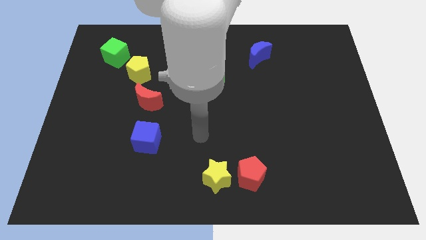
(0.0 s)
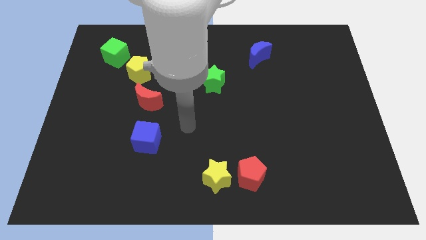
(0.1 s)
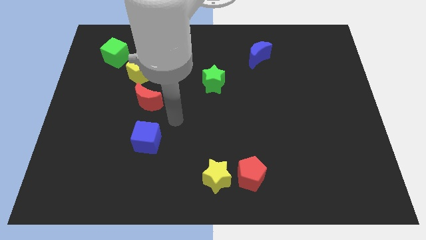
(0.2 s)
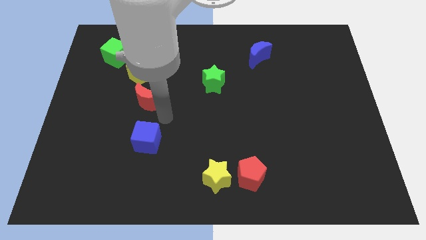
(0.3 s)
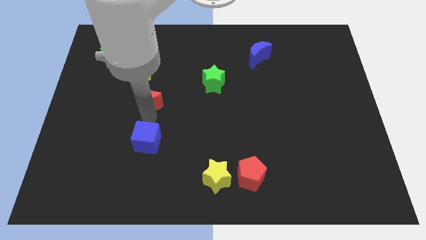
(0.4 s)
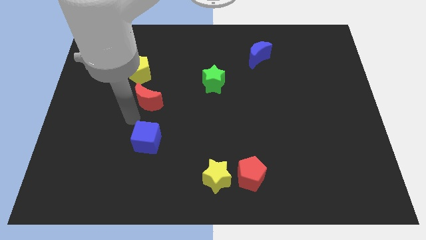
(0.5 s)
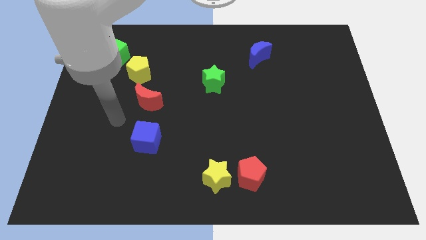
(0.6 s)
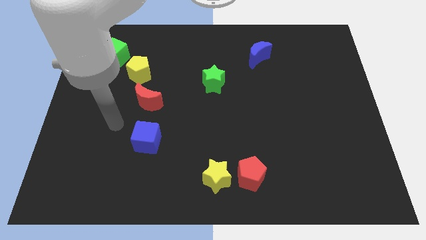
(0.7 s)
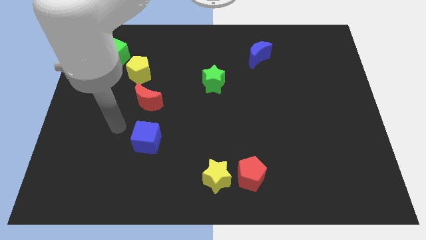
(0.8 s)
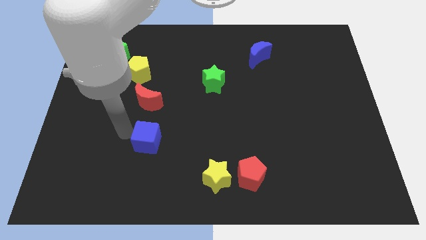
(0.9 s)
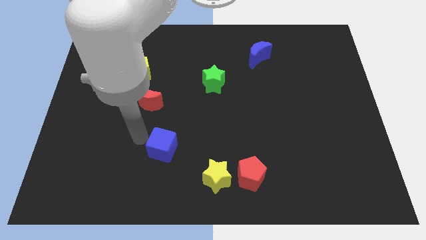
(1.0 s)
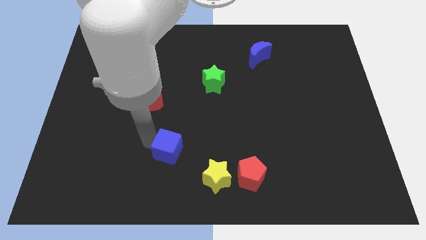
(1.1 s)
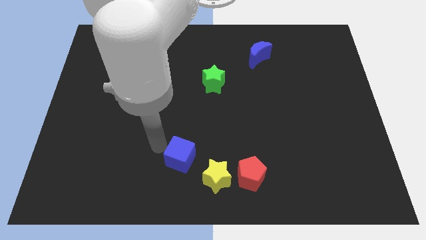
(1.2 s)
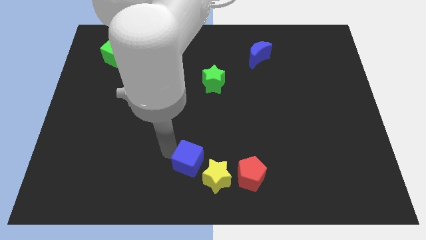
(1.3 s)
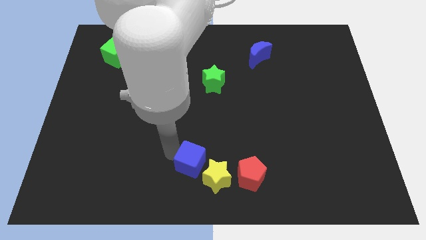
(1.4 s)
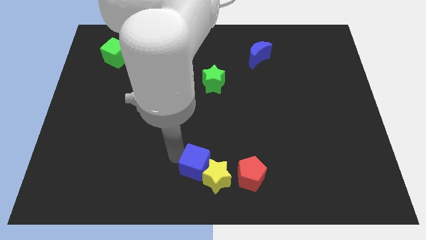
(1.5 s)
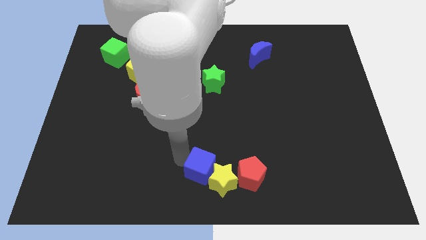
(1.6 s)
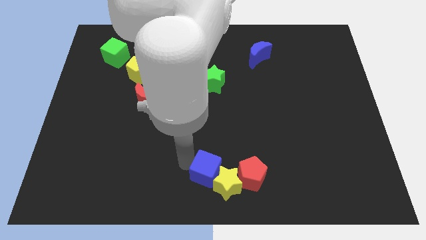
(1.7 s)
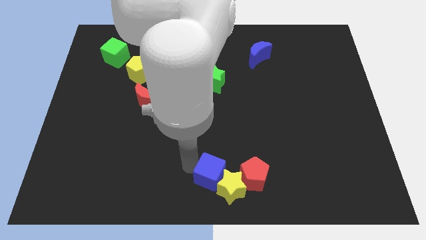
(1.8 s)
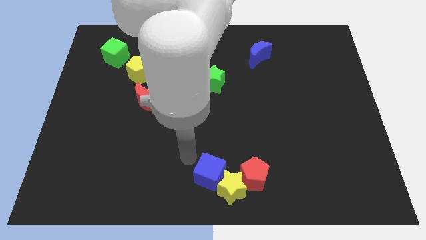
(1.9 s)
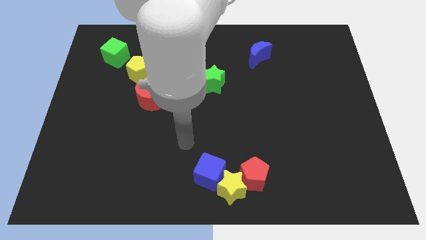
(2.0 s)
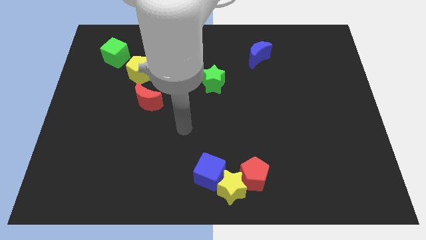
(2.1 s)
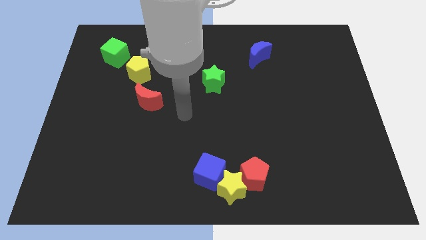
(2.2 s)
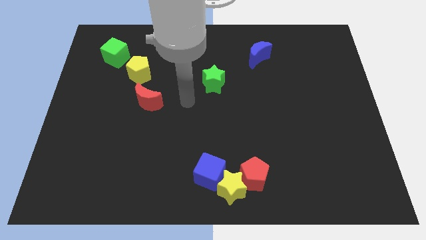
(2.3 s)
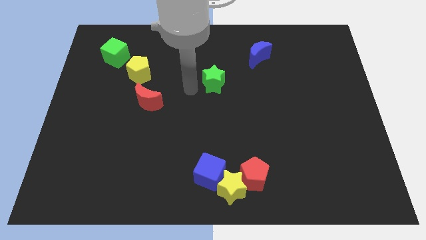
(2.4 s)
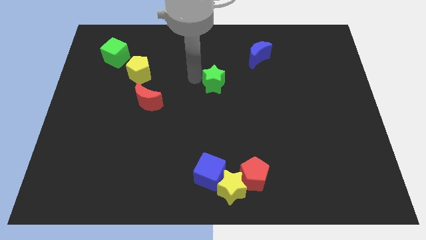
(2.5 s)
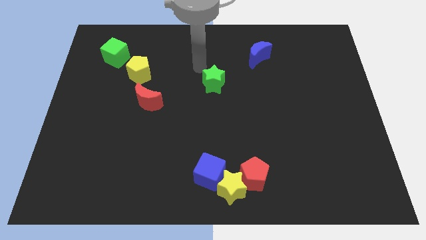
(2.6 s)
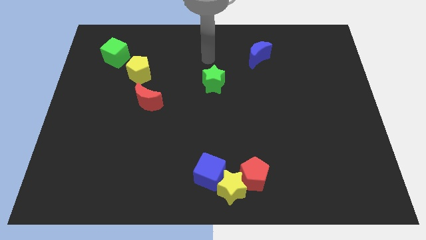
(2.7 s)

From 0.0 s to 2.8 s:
push the blue cube into the yellow star

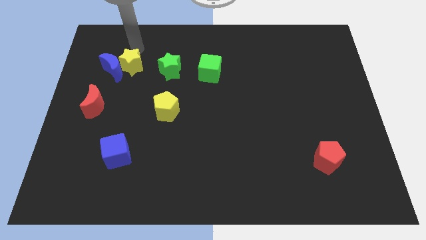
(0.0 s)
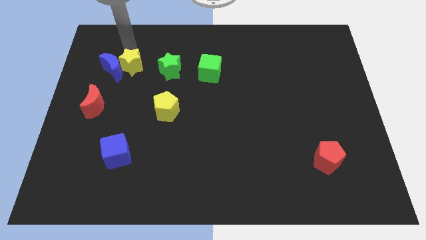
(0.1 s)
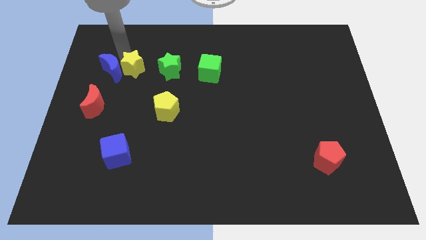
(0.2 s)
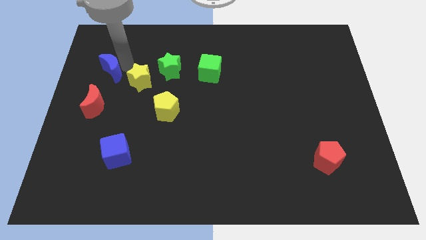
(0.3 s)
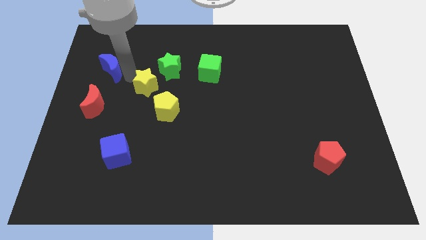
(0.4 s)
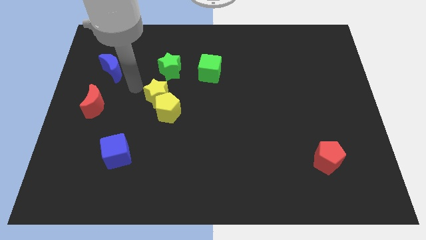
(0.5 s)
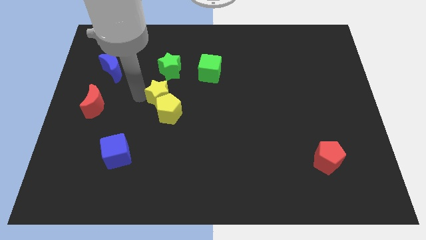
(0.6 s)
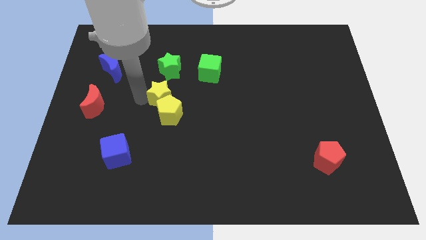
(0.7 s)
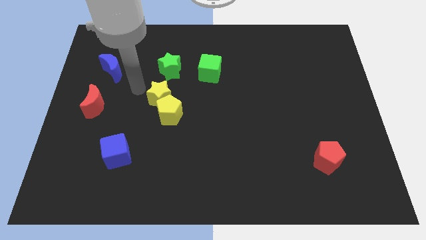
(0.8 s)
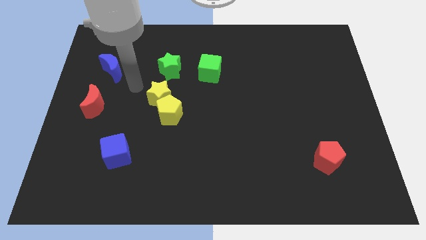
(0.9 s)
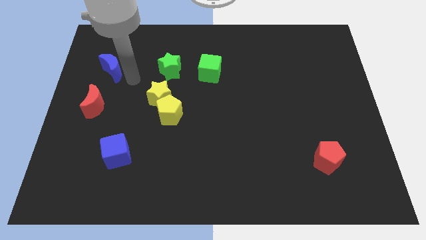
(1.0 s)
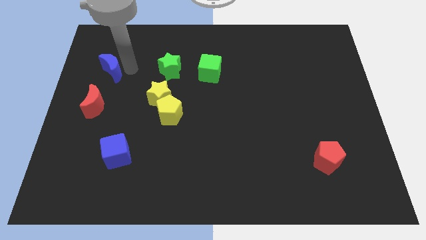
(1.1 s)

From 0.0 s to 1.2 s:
place yellow star to the bottom of green star

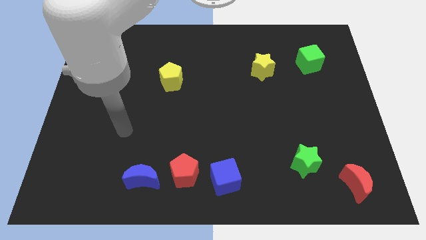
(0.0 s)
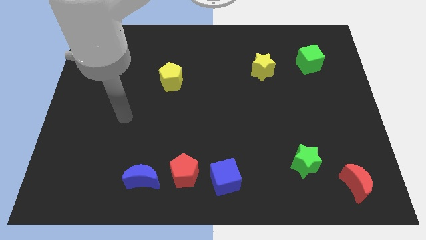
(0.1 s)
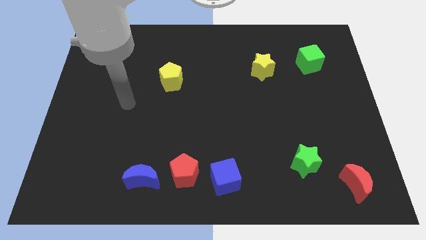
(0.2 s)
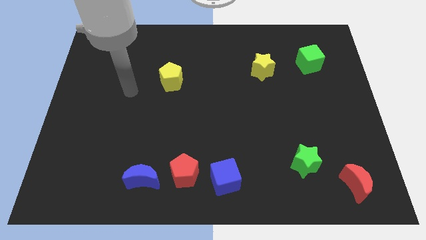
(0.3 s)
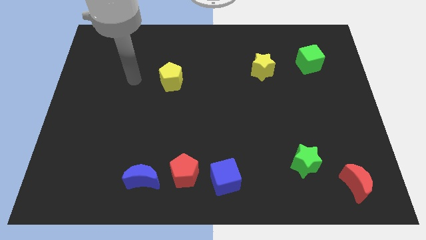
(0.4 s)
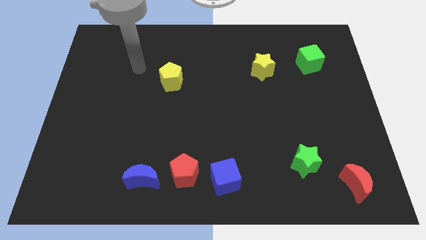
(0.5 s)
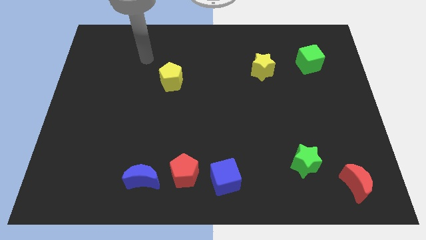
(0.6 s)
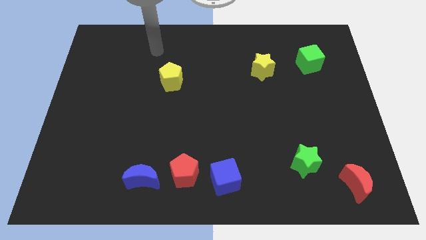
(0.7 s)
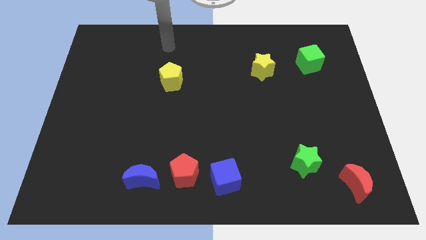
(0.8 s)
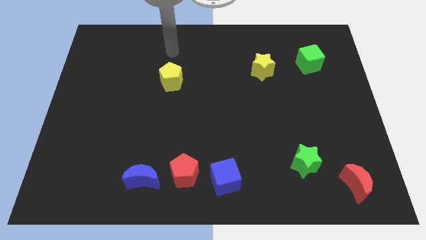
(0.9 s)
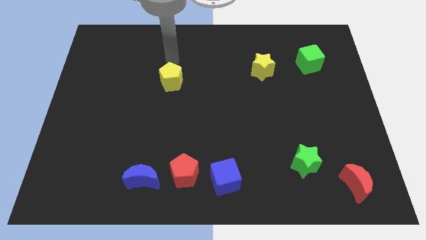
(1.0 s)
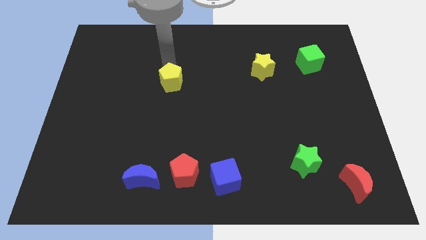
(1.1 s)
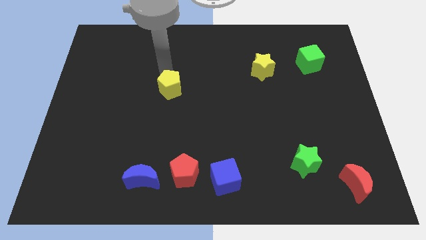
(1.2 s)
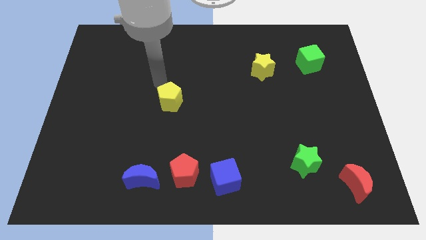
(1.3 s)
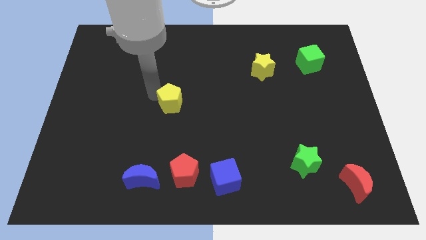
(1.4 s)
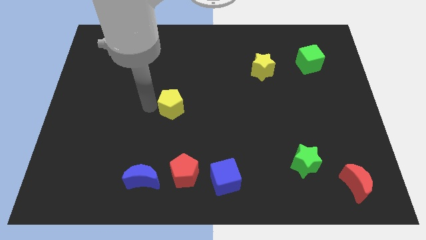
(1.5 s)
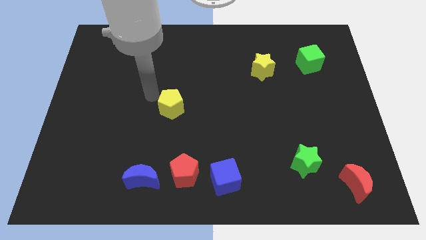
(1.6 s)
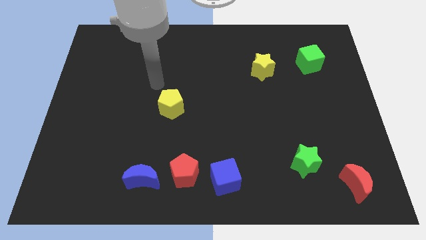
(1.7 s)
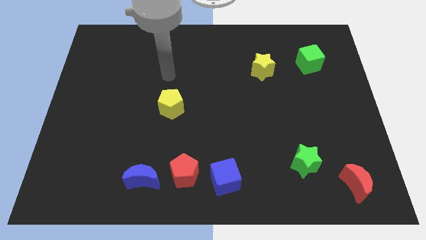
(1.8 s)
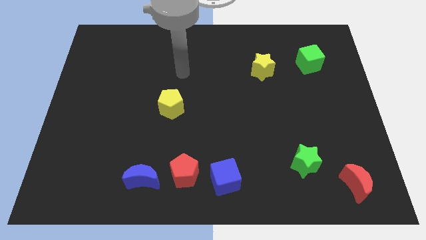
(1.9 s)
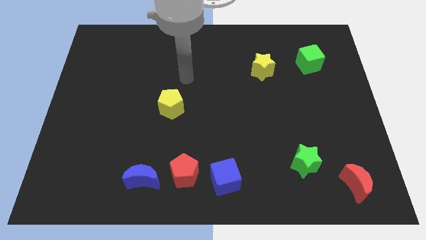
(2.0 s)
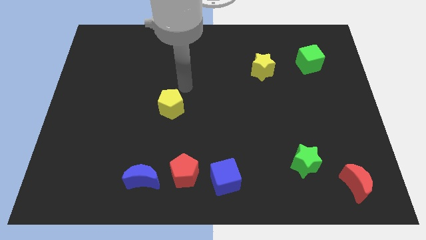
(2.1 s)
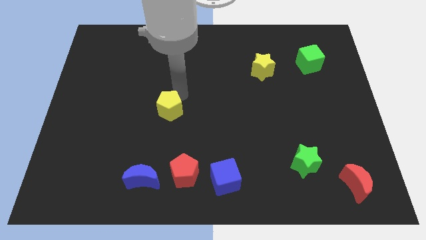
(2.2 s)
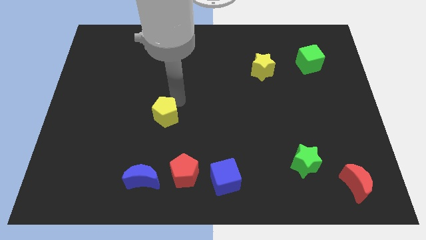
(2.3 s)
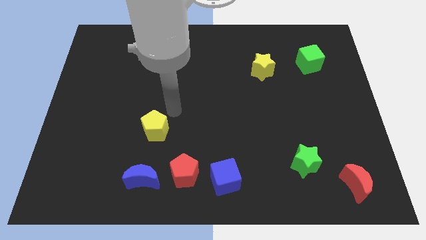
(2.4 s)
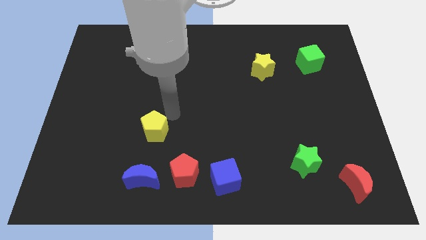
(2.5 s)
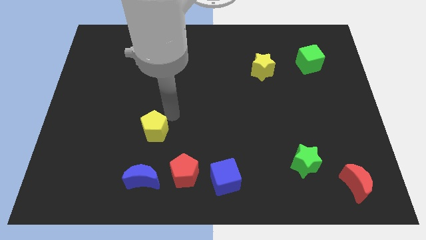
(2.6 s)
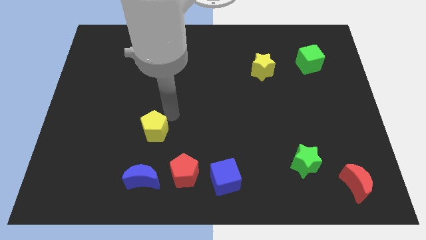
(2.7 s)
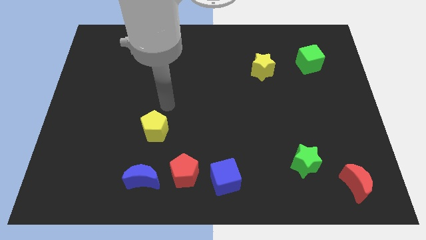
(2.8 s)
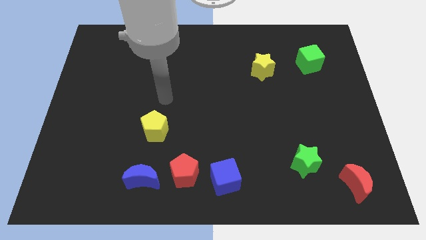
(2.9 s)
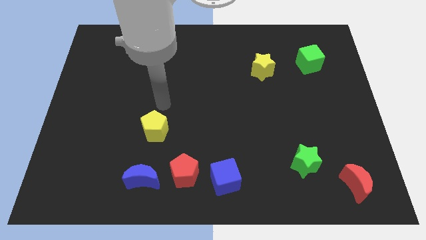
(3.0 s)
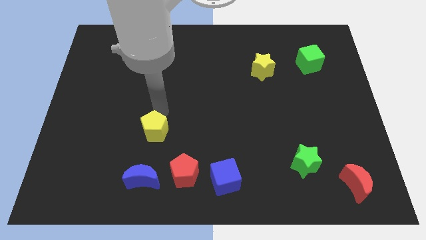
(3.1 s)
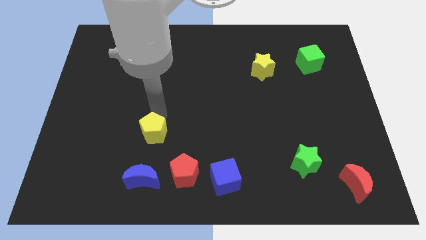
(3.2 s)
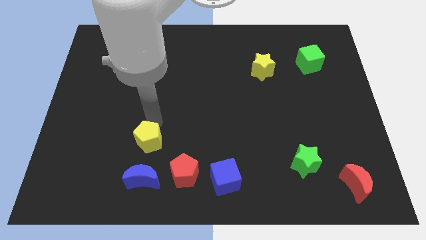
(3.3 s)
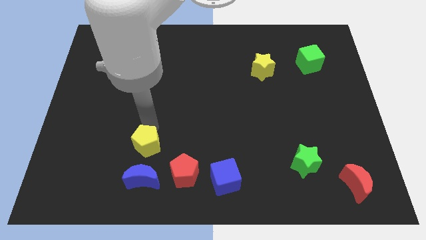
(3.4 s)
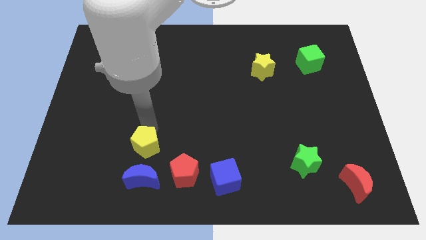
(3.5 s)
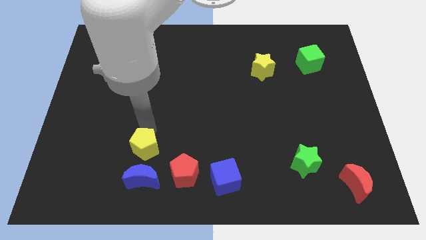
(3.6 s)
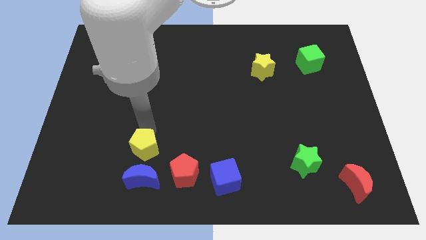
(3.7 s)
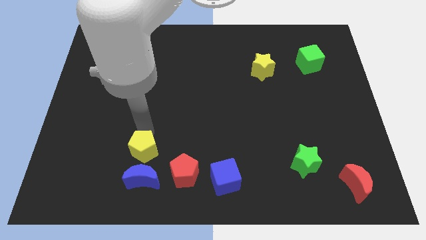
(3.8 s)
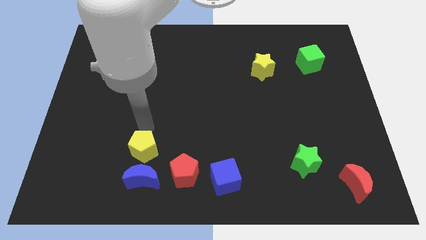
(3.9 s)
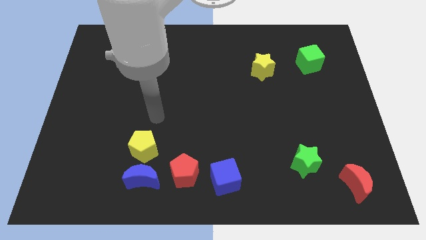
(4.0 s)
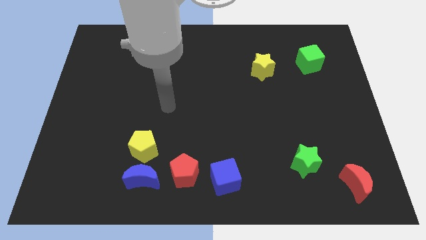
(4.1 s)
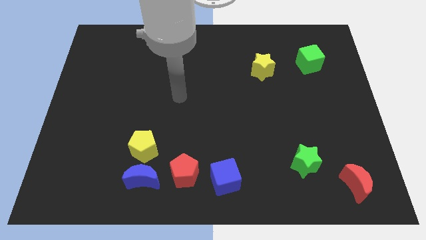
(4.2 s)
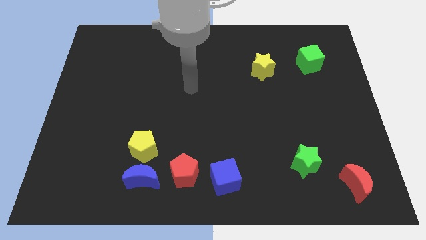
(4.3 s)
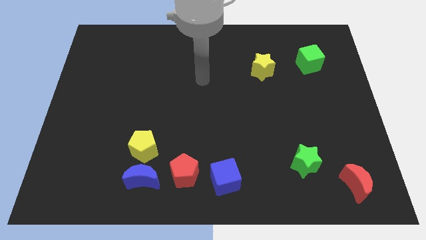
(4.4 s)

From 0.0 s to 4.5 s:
slide the yellow pentagon to the top of the blue crescent

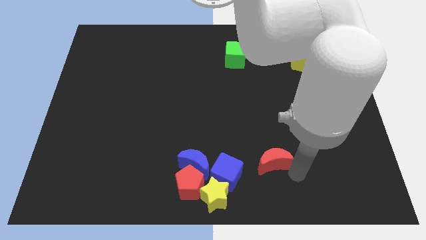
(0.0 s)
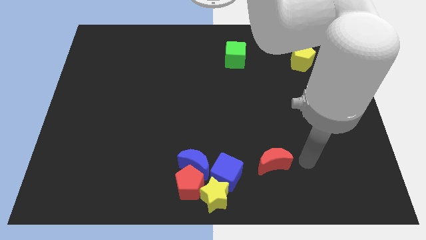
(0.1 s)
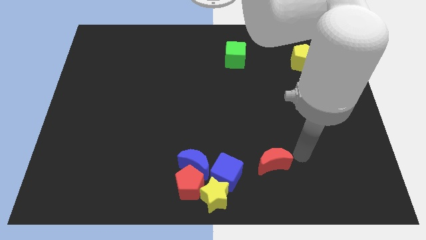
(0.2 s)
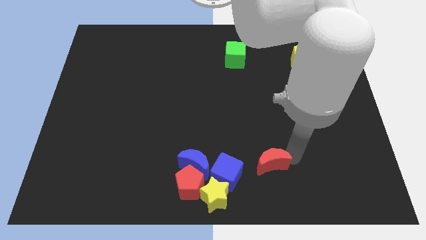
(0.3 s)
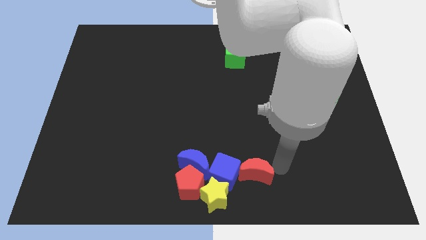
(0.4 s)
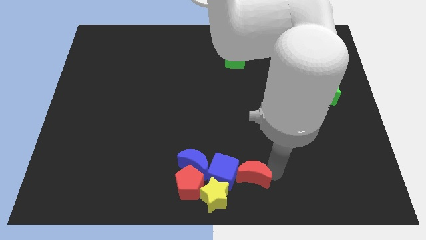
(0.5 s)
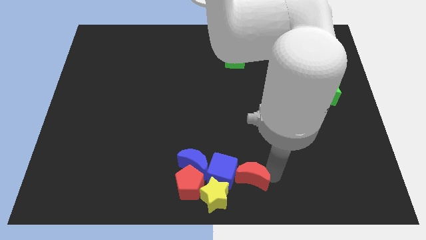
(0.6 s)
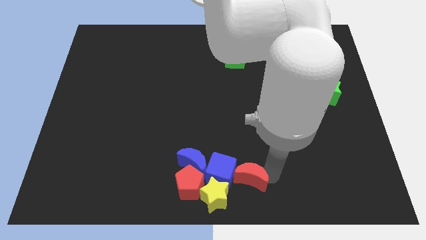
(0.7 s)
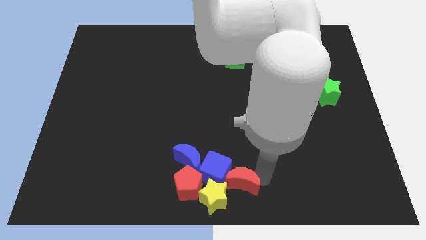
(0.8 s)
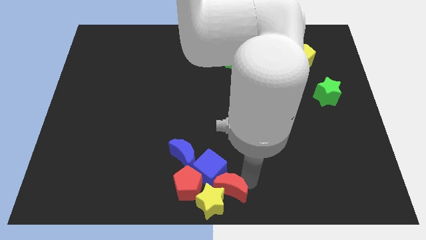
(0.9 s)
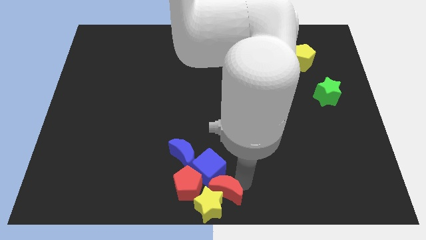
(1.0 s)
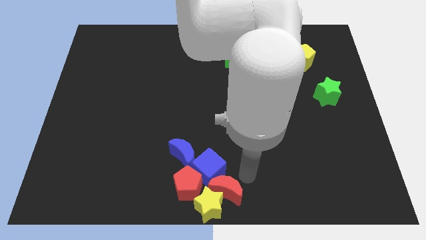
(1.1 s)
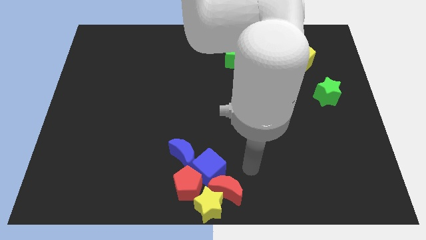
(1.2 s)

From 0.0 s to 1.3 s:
push the red crescent into top of the yellow star
